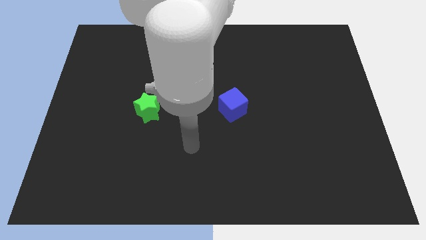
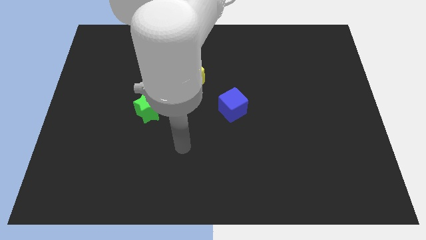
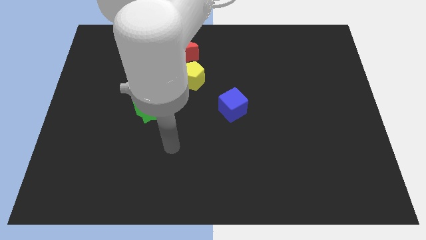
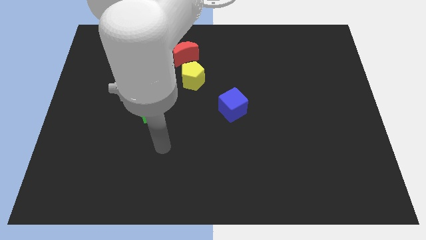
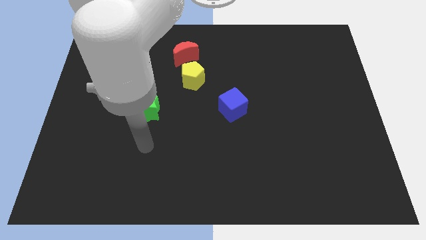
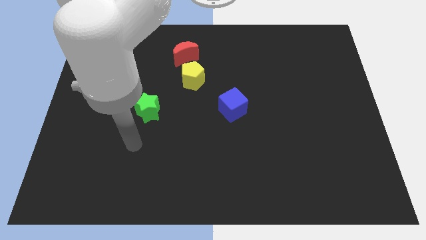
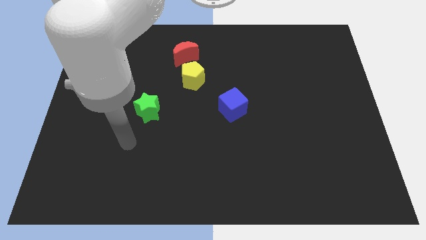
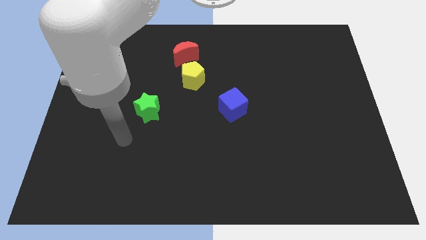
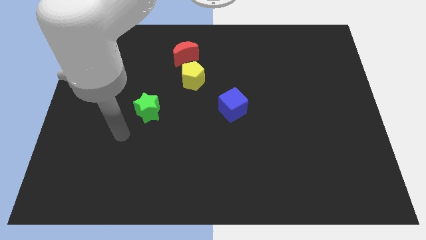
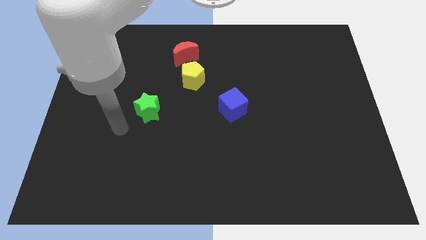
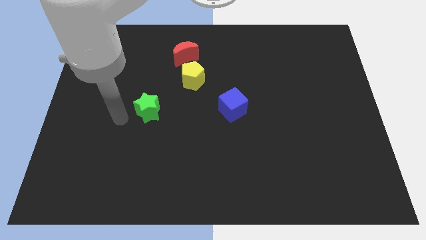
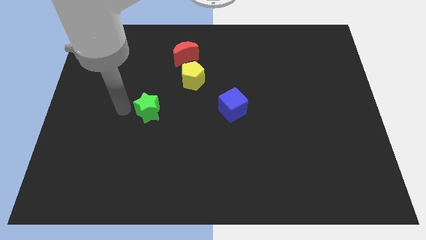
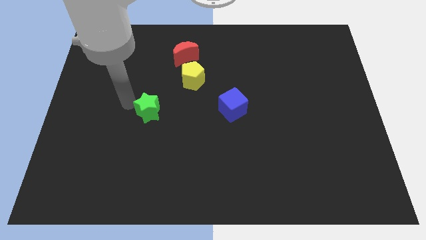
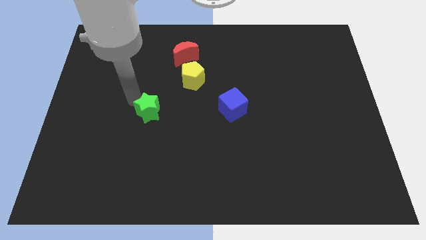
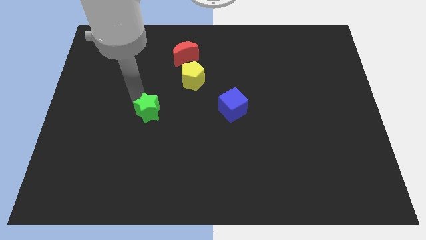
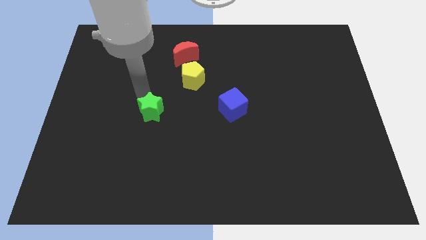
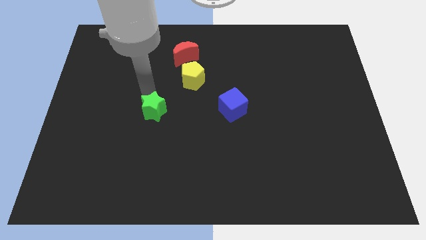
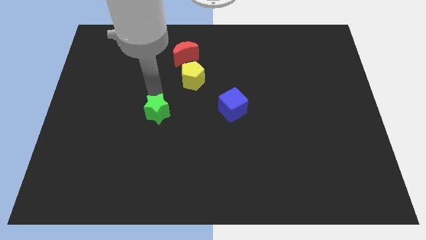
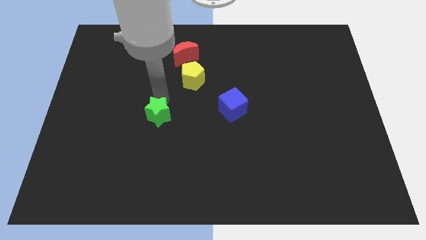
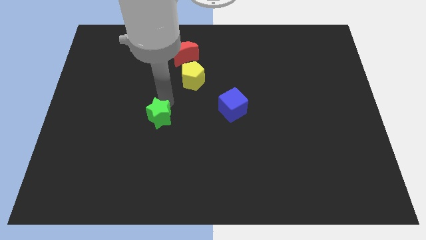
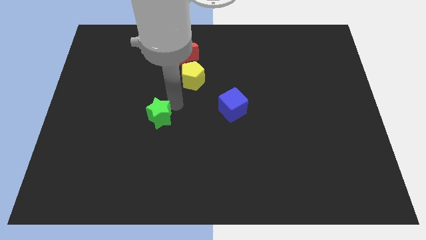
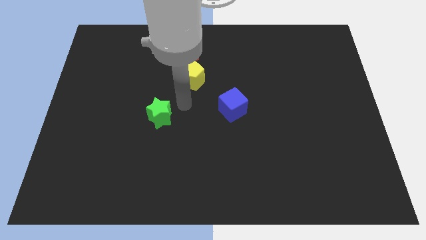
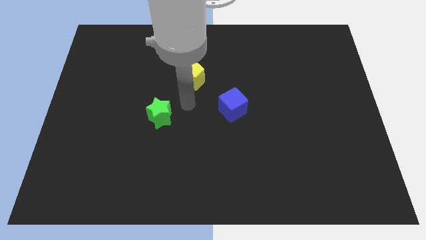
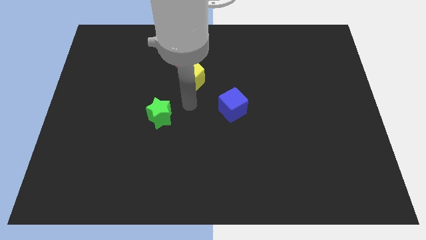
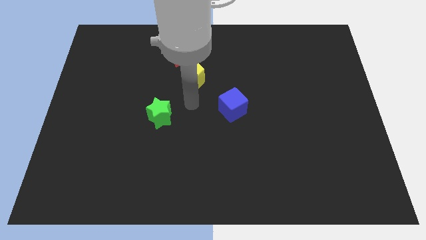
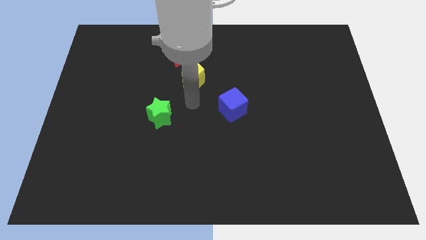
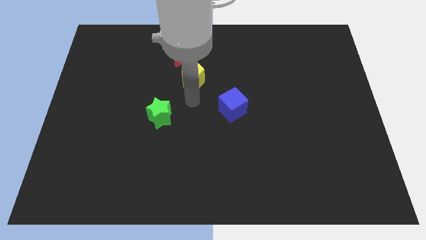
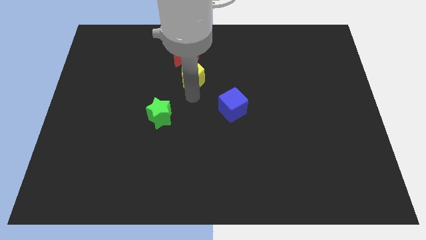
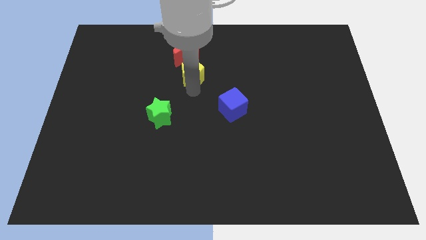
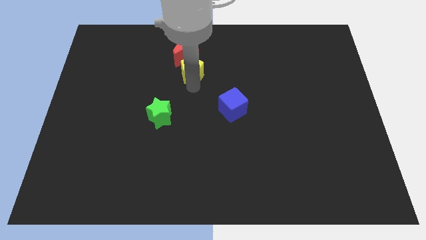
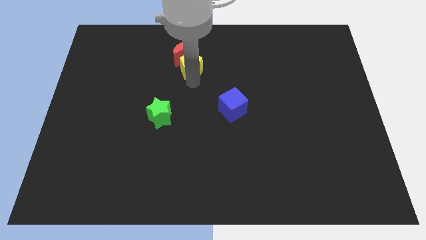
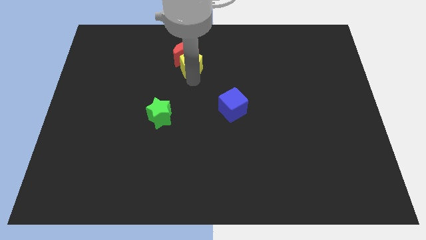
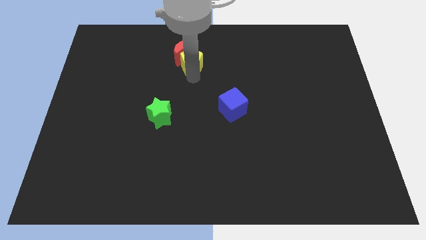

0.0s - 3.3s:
put the yellow pentagon to the red moon

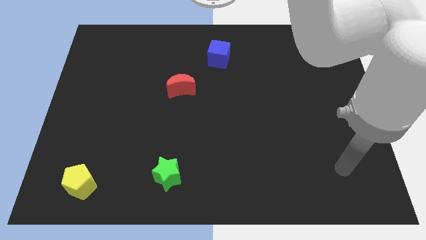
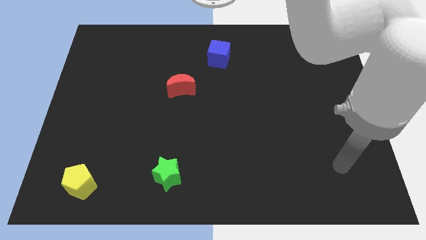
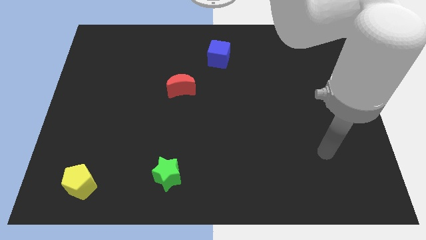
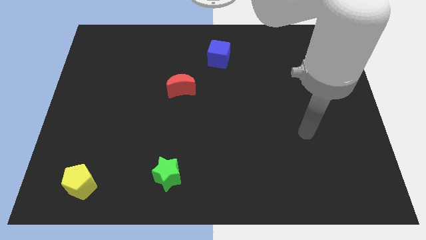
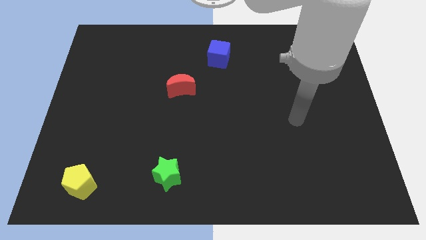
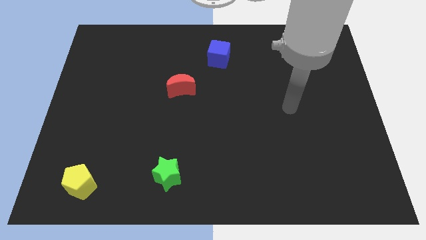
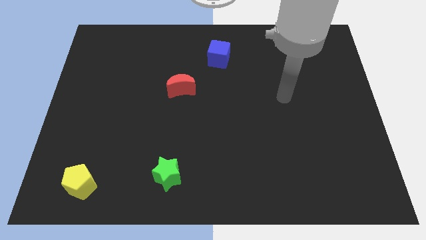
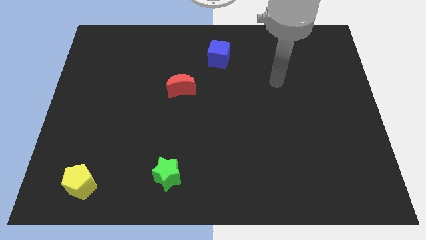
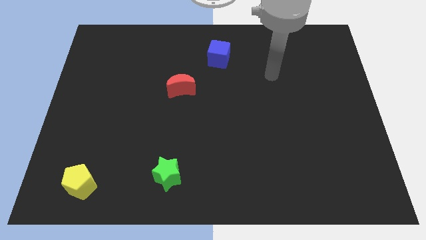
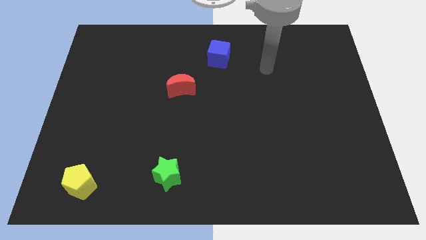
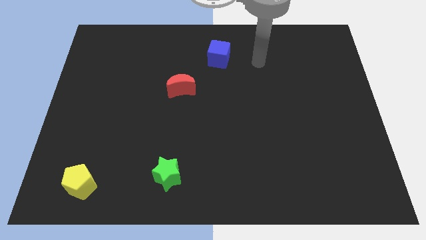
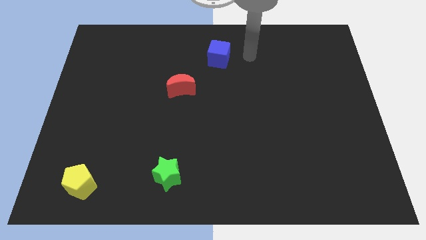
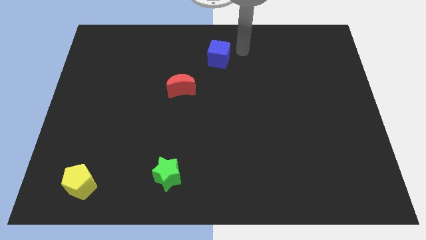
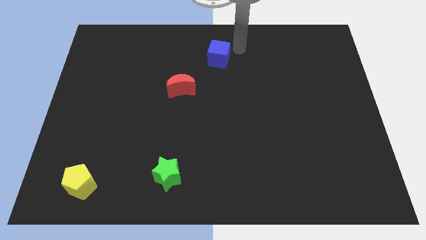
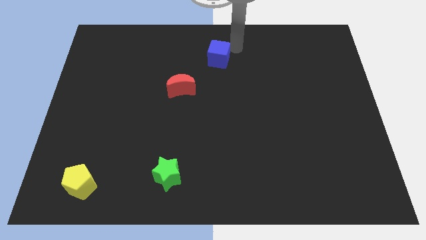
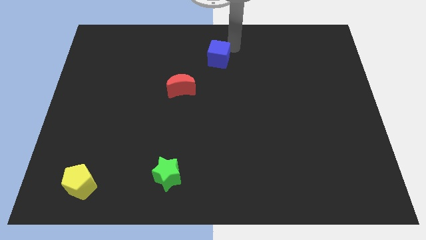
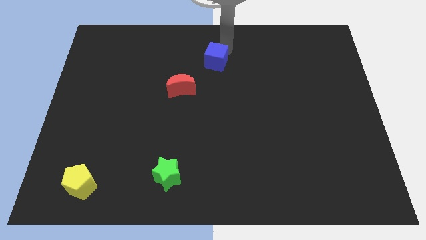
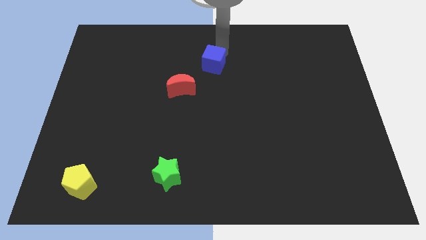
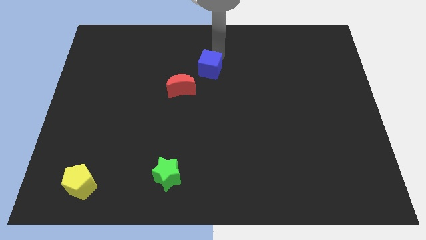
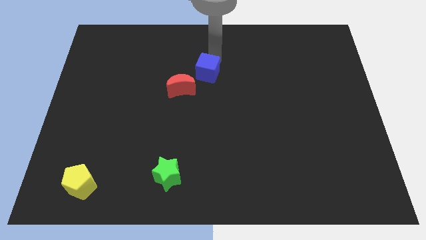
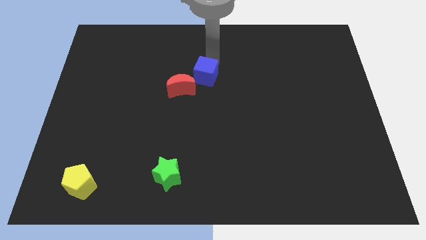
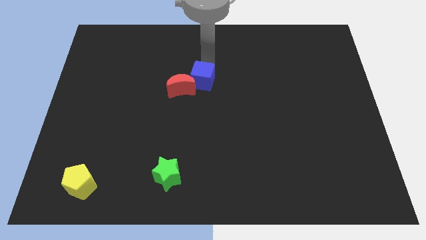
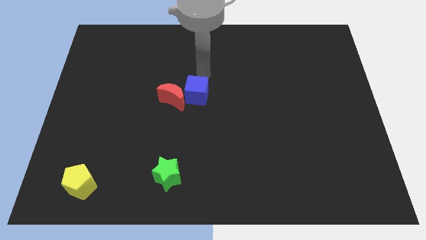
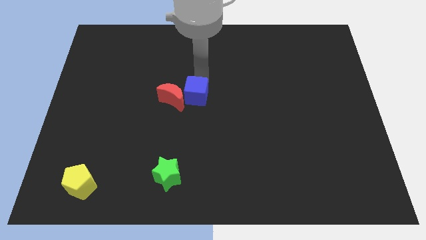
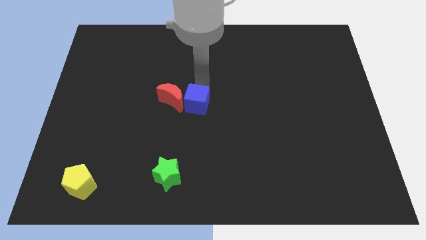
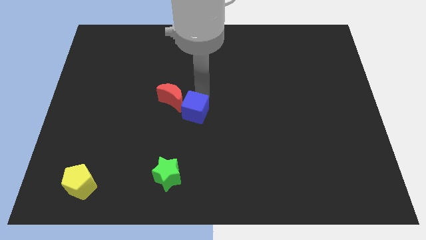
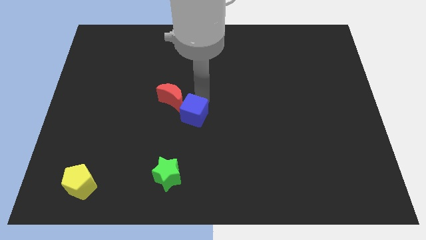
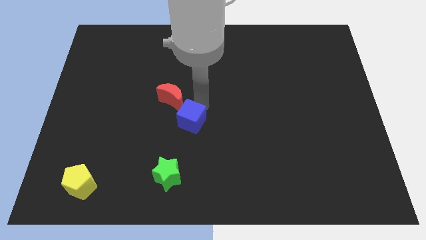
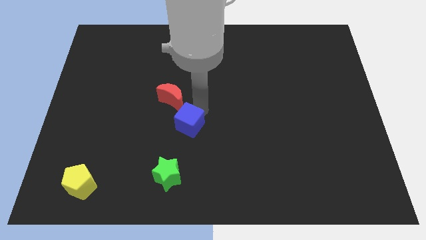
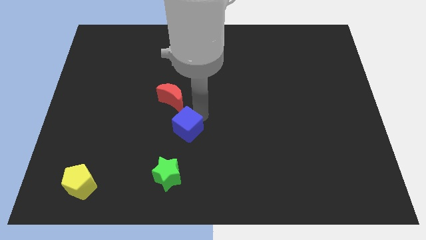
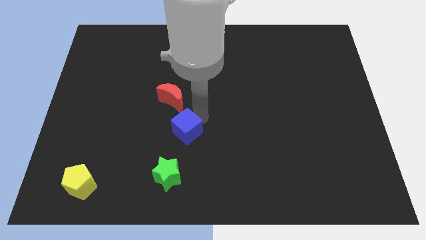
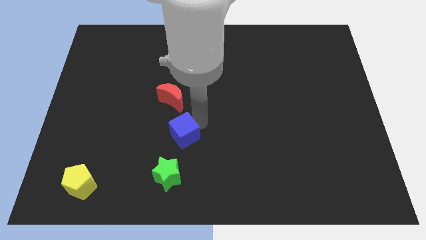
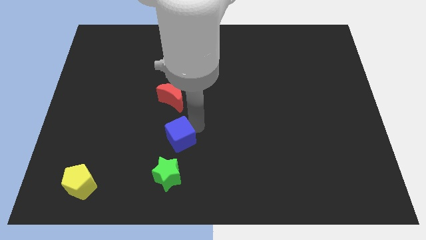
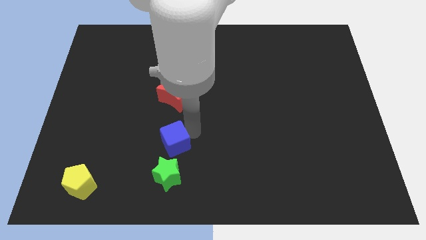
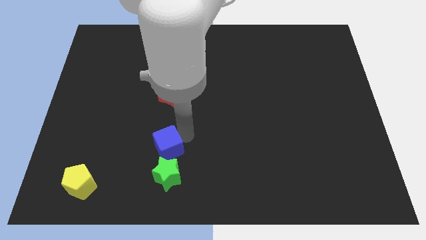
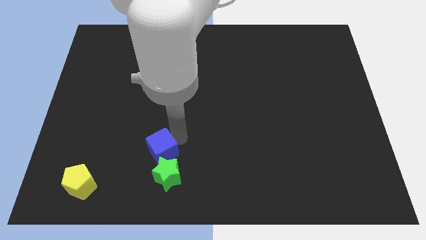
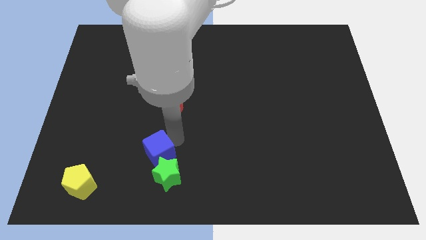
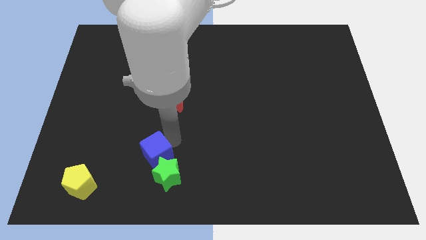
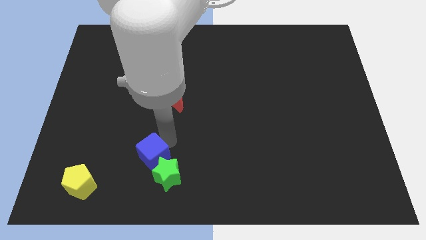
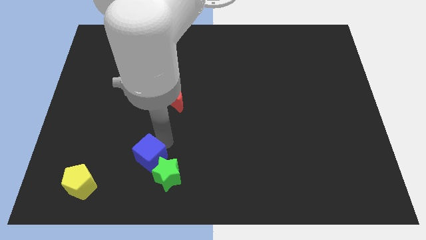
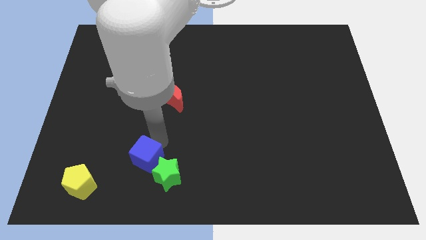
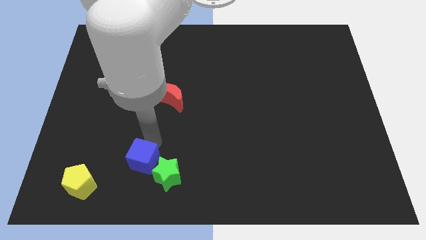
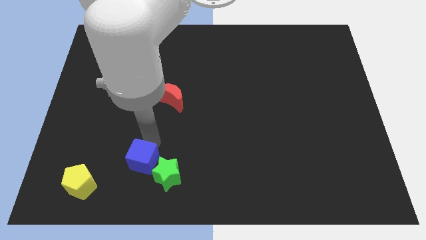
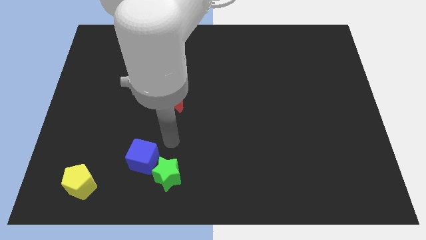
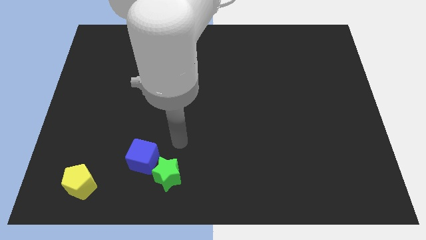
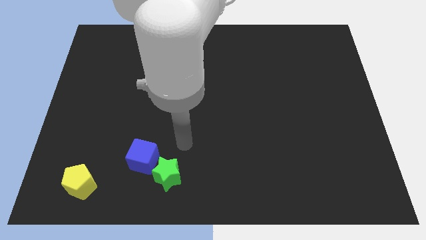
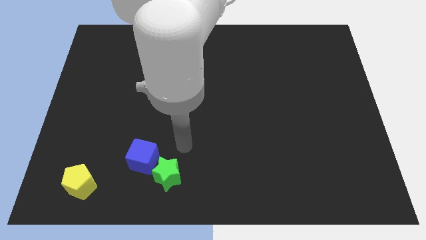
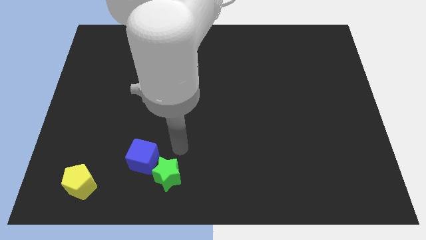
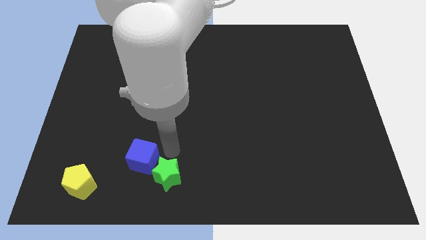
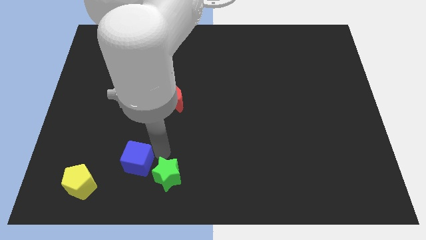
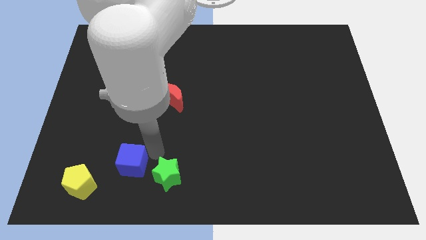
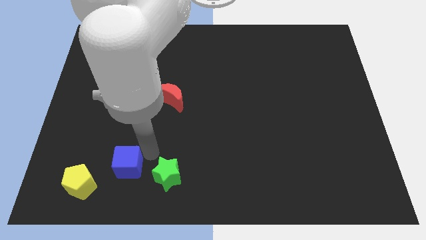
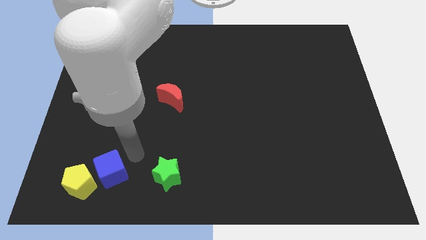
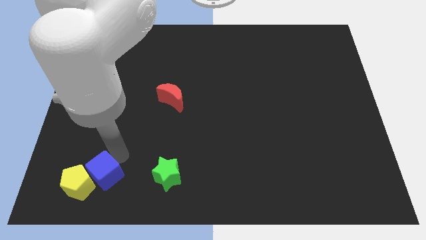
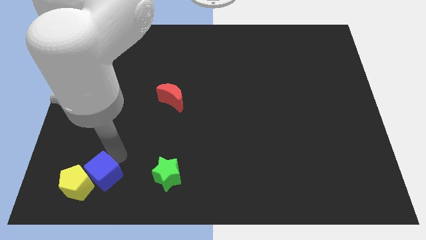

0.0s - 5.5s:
move the blue block towards the yellow pentagon
